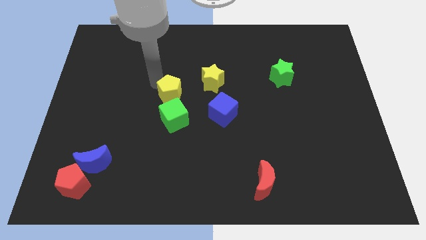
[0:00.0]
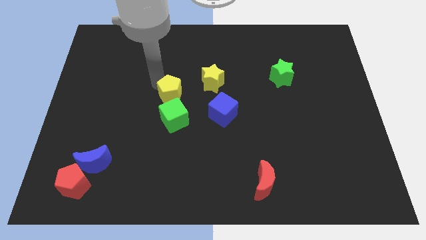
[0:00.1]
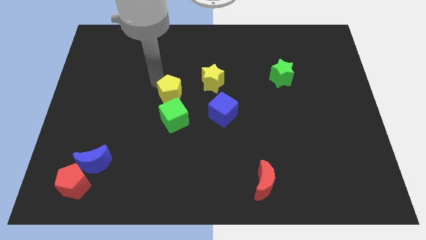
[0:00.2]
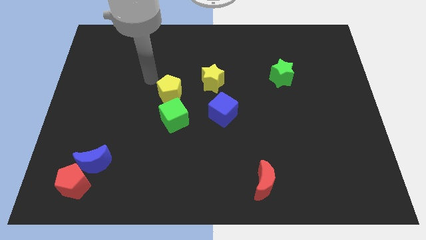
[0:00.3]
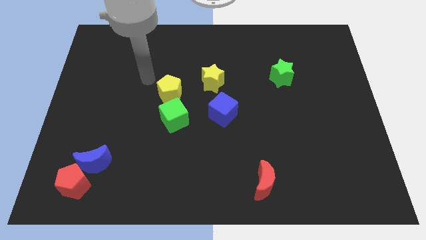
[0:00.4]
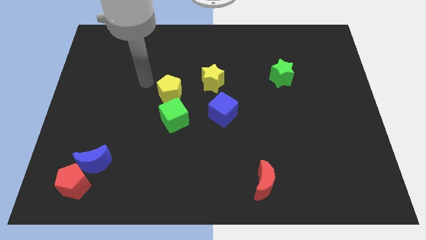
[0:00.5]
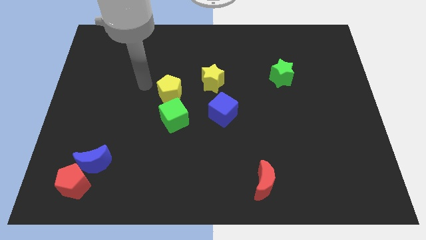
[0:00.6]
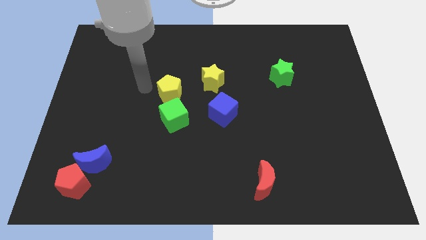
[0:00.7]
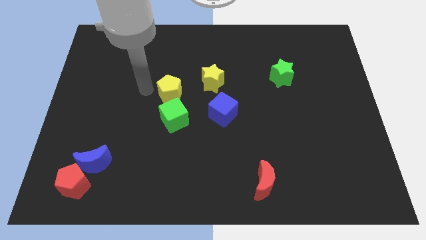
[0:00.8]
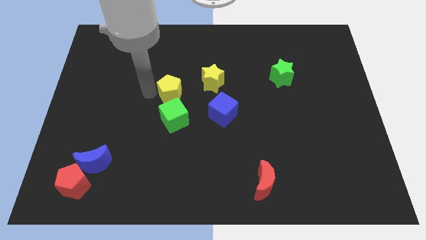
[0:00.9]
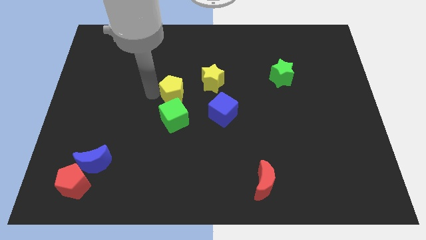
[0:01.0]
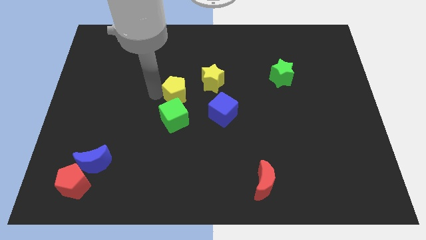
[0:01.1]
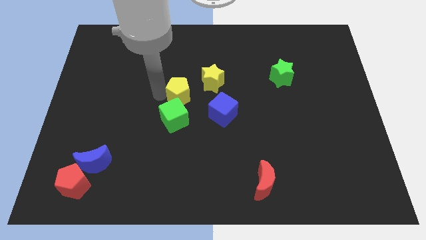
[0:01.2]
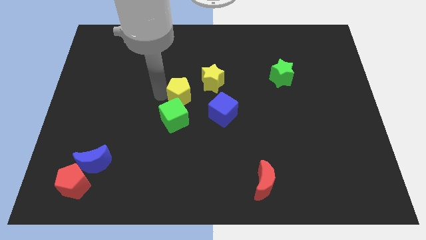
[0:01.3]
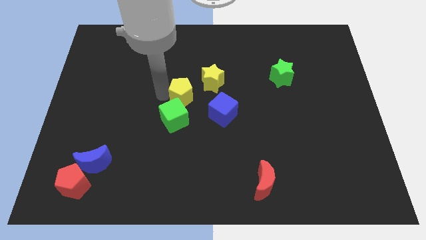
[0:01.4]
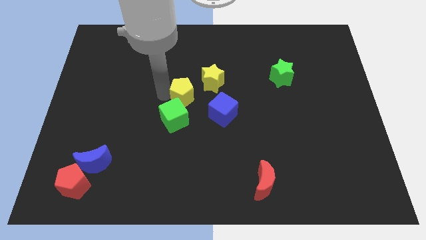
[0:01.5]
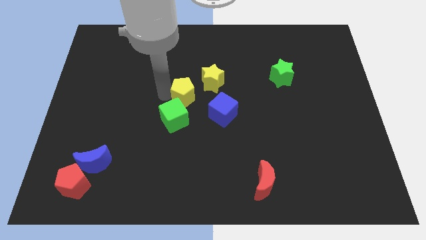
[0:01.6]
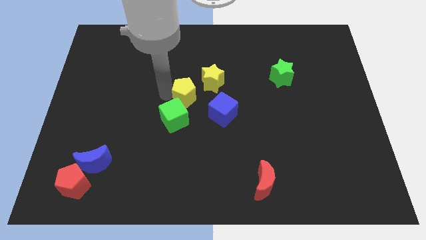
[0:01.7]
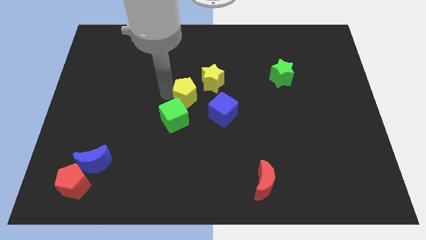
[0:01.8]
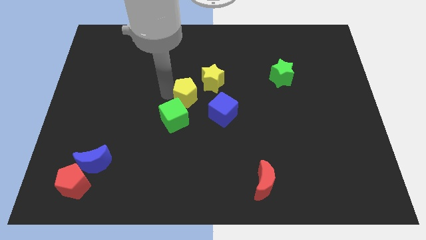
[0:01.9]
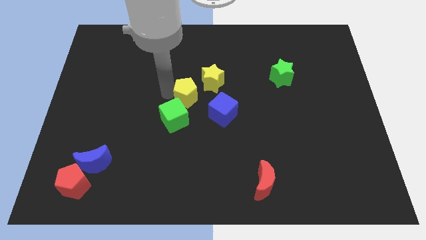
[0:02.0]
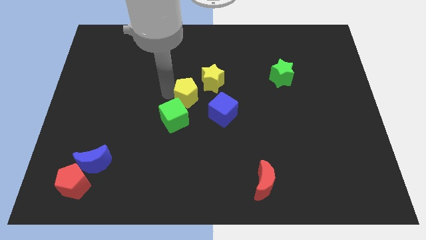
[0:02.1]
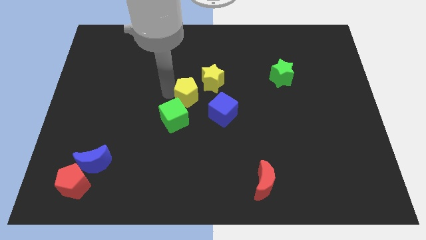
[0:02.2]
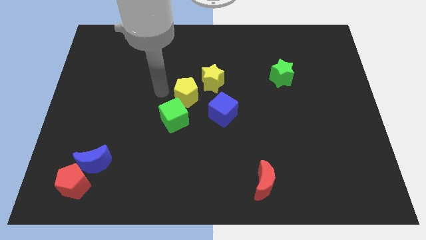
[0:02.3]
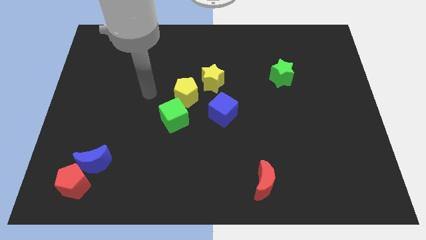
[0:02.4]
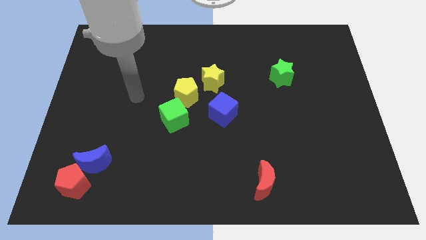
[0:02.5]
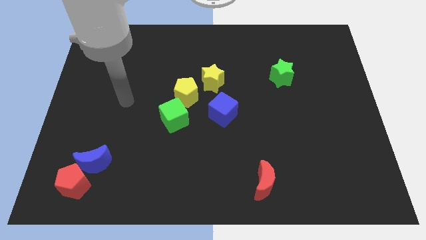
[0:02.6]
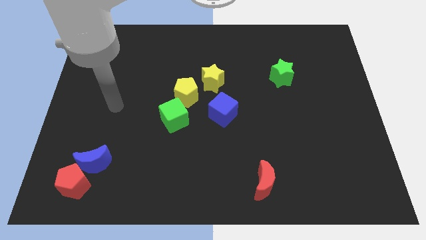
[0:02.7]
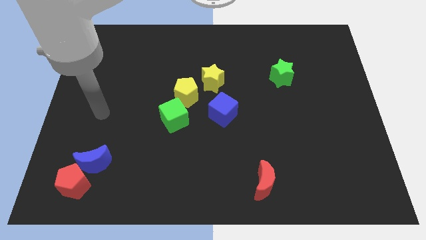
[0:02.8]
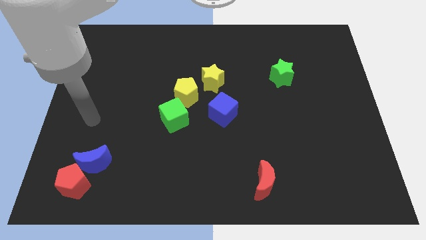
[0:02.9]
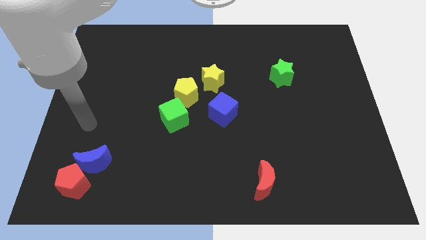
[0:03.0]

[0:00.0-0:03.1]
place yellow pentagon above to the green cube

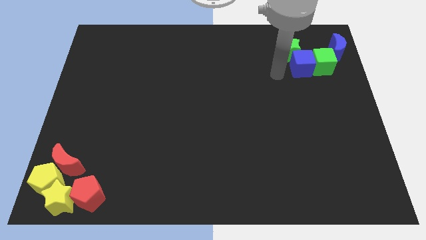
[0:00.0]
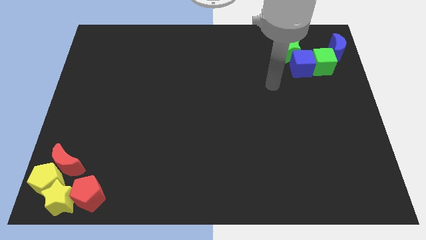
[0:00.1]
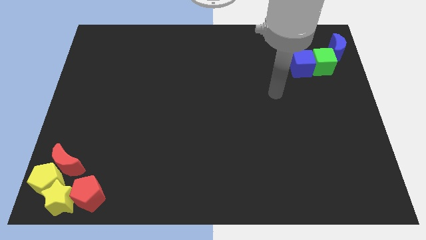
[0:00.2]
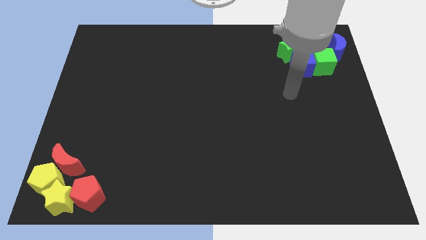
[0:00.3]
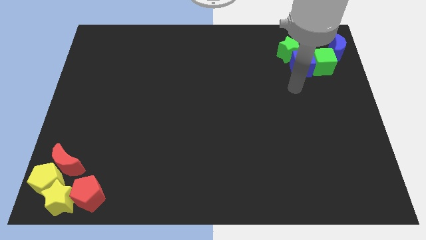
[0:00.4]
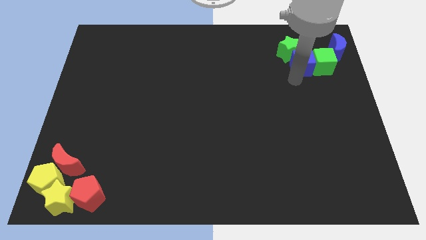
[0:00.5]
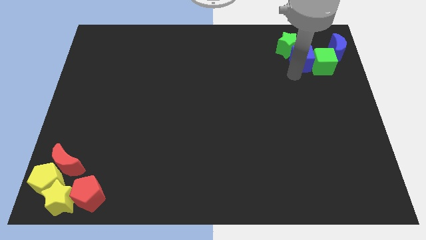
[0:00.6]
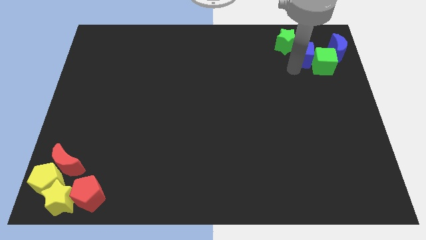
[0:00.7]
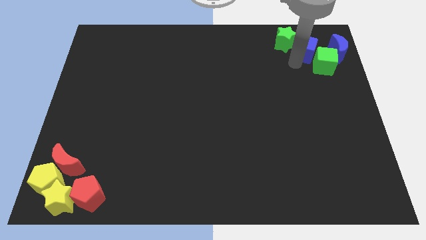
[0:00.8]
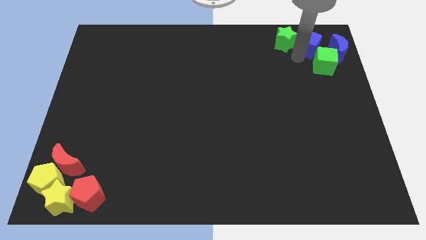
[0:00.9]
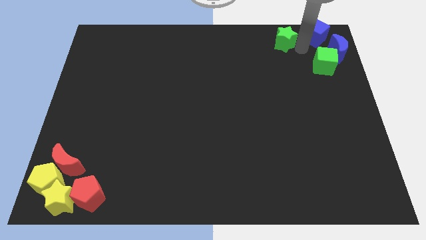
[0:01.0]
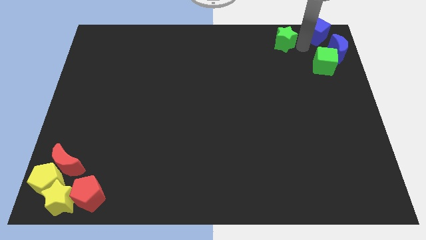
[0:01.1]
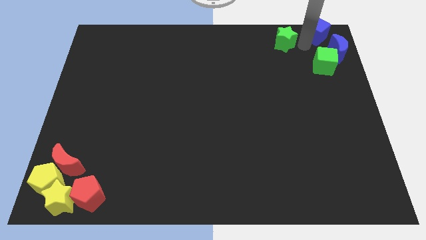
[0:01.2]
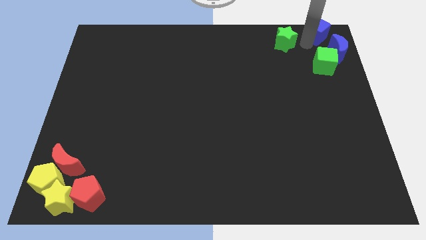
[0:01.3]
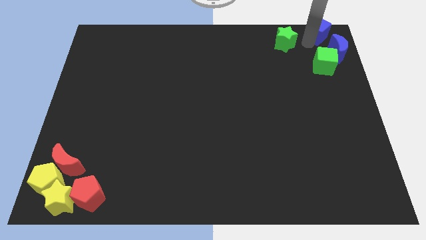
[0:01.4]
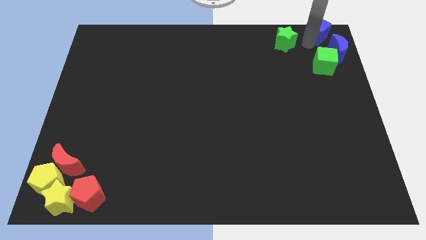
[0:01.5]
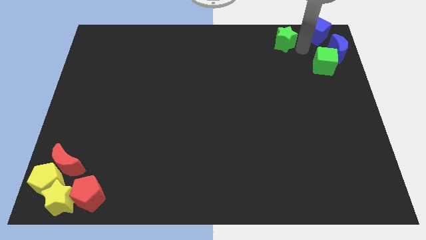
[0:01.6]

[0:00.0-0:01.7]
separate the blue cube from the green blocks

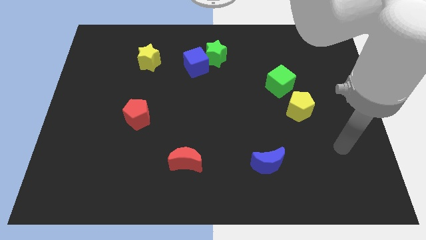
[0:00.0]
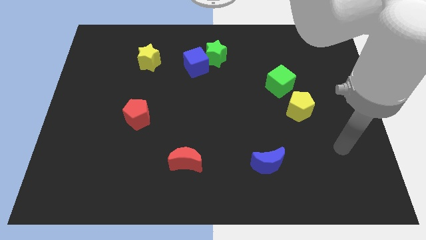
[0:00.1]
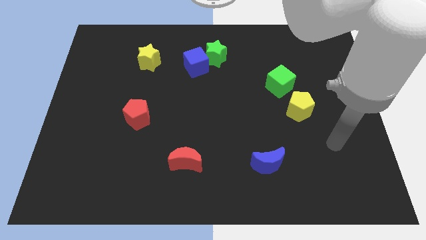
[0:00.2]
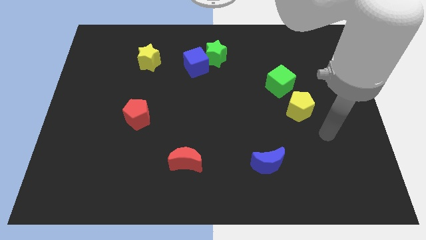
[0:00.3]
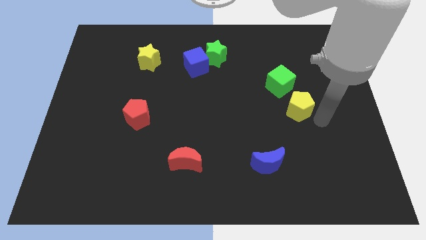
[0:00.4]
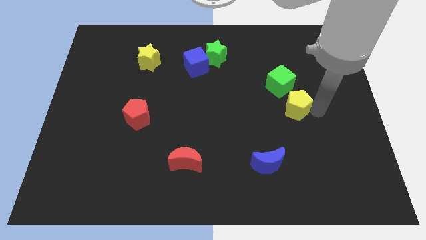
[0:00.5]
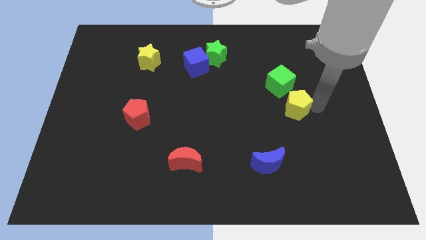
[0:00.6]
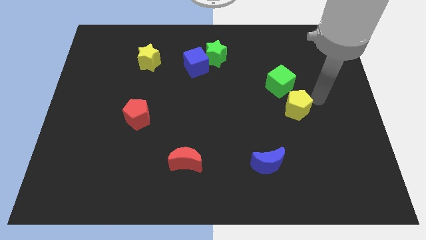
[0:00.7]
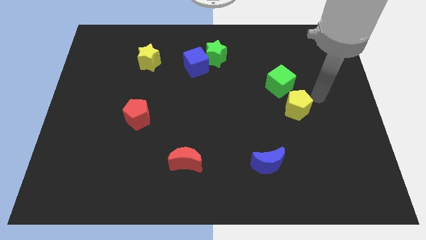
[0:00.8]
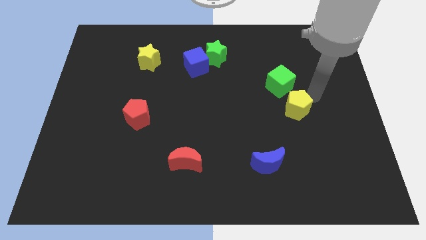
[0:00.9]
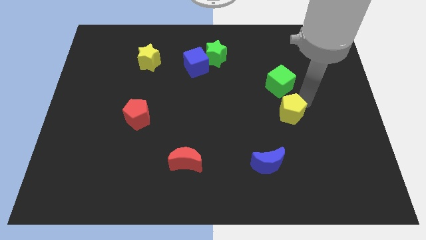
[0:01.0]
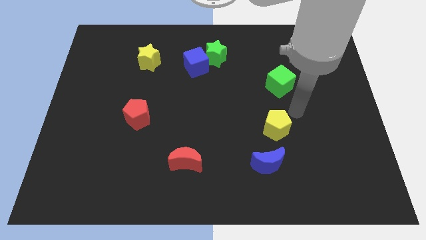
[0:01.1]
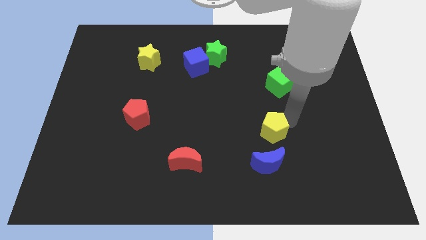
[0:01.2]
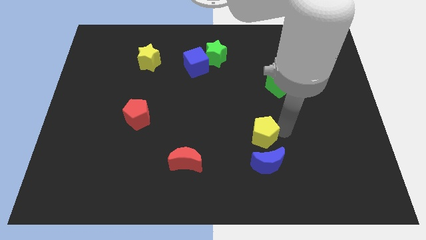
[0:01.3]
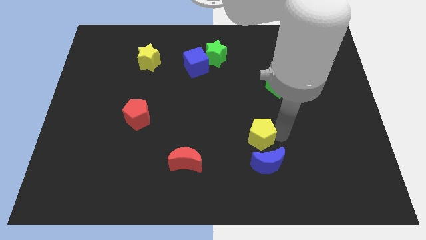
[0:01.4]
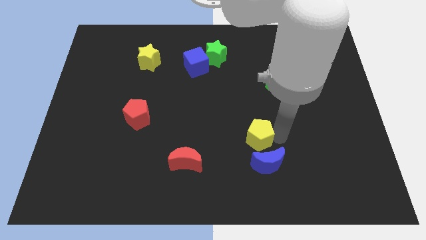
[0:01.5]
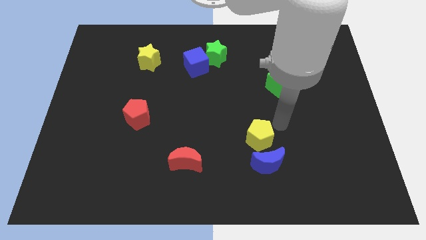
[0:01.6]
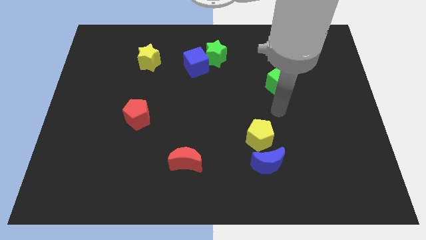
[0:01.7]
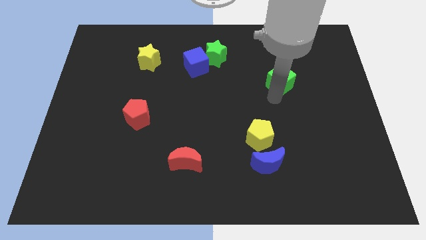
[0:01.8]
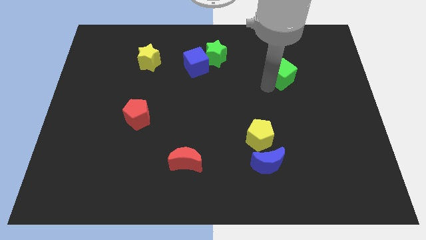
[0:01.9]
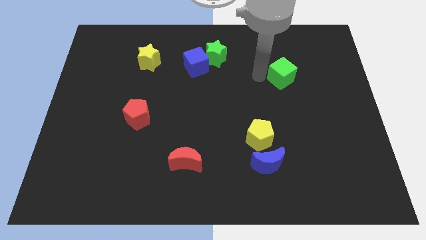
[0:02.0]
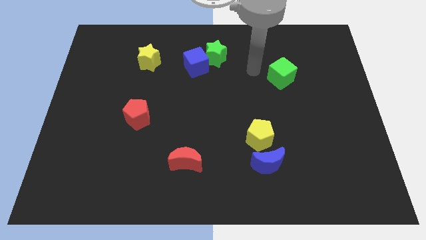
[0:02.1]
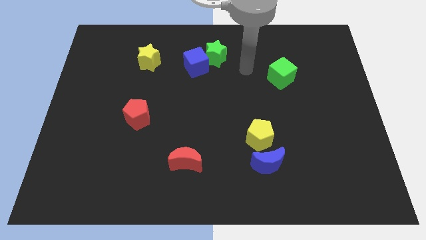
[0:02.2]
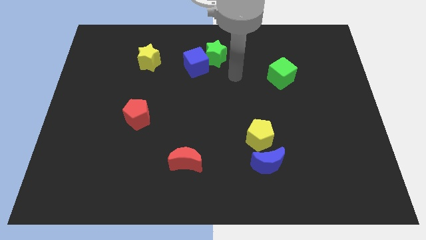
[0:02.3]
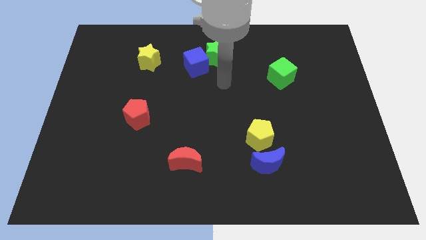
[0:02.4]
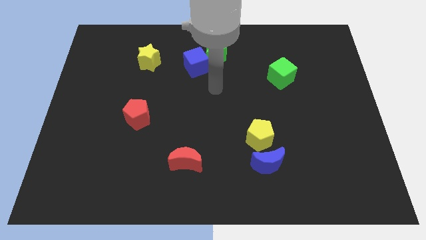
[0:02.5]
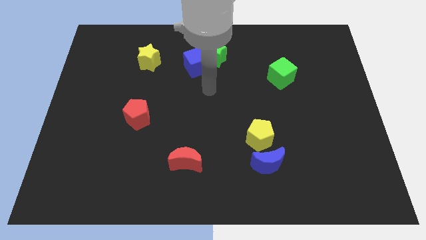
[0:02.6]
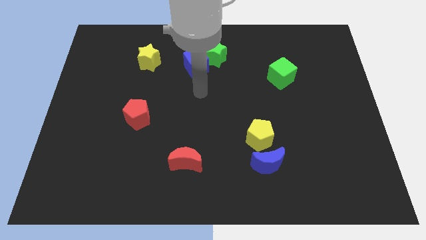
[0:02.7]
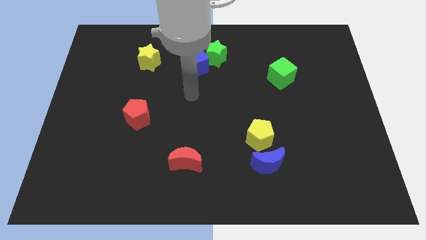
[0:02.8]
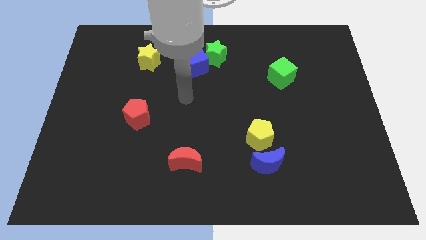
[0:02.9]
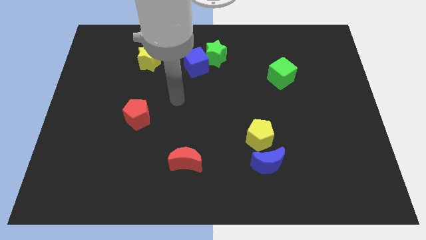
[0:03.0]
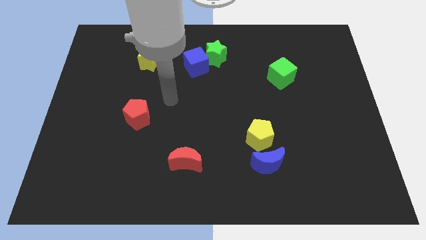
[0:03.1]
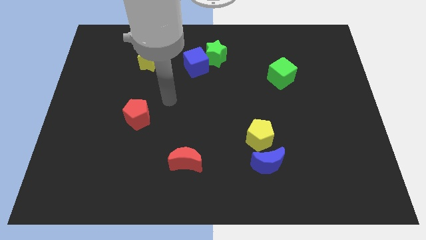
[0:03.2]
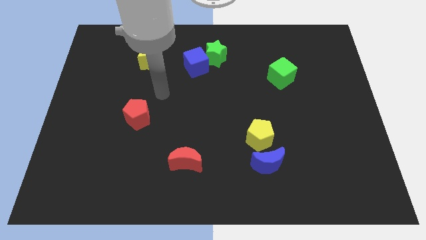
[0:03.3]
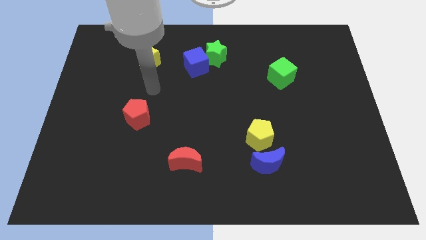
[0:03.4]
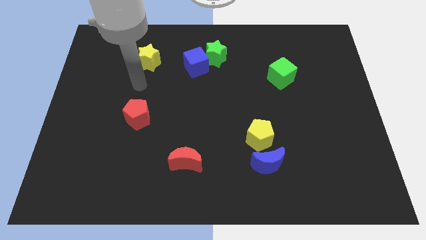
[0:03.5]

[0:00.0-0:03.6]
push the yellow pentagon to the top of the blue crescent

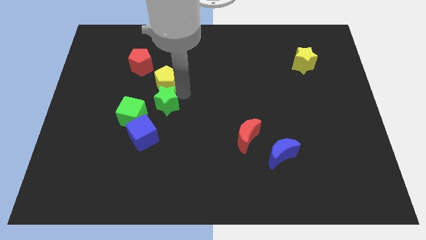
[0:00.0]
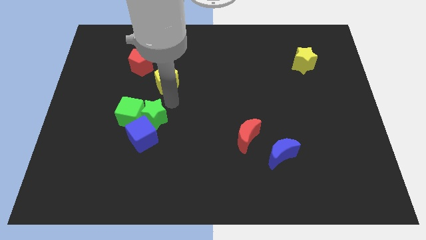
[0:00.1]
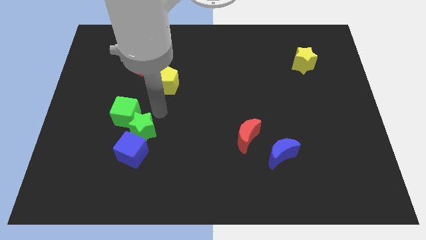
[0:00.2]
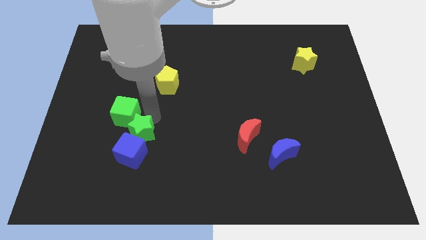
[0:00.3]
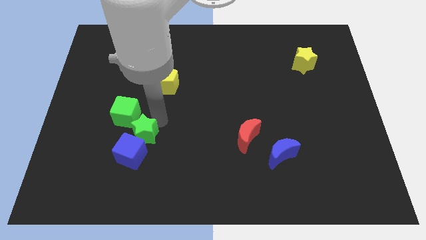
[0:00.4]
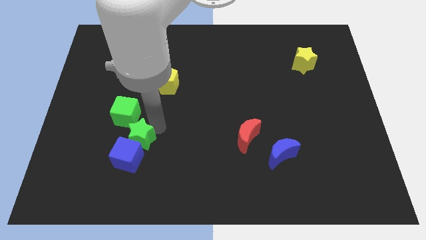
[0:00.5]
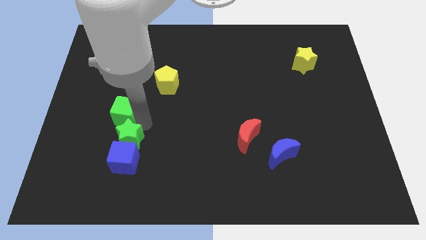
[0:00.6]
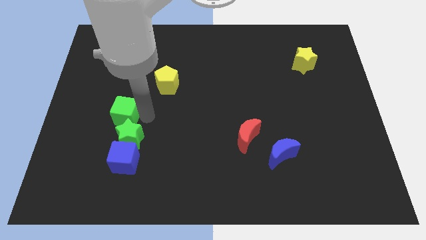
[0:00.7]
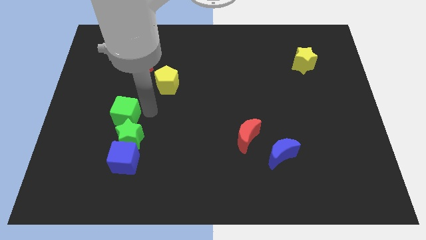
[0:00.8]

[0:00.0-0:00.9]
move the green star between blue cube and green cube
